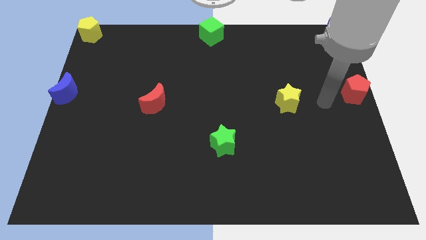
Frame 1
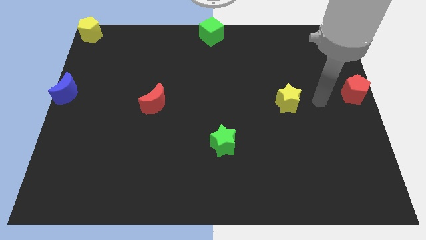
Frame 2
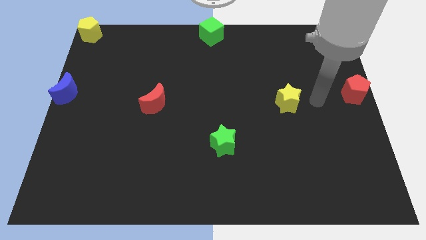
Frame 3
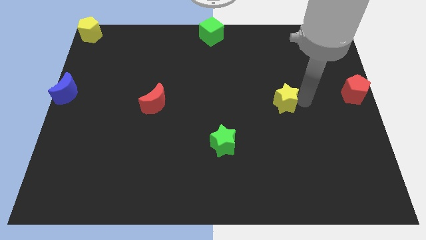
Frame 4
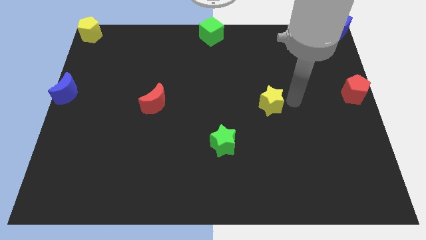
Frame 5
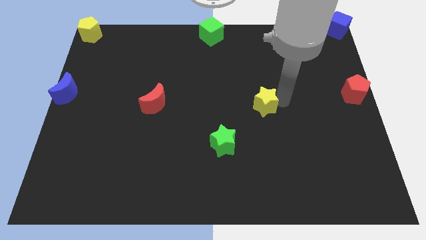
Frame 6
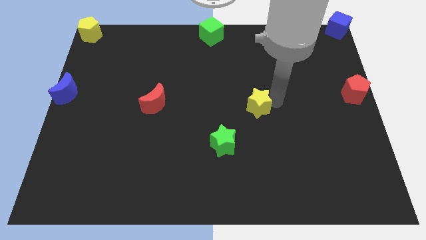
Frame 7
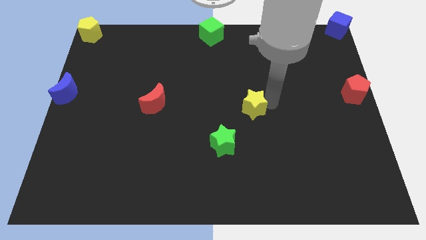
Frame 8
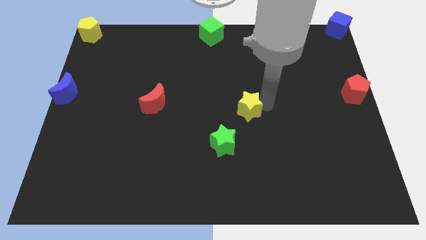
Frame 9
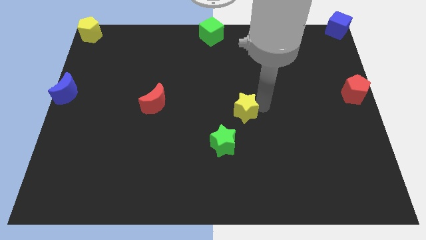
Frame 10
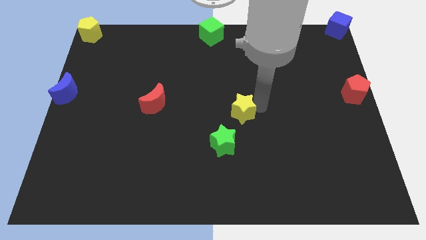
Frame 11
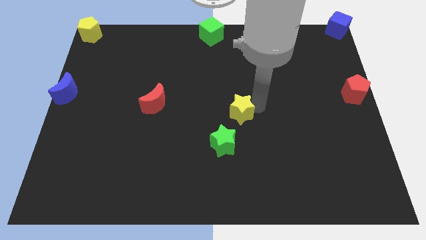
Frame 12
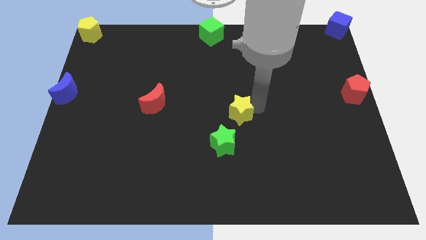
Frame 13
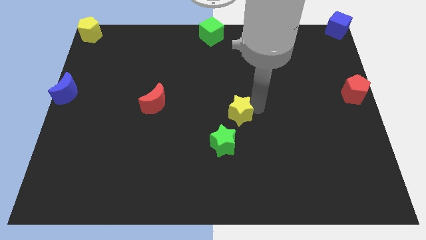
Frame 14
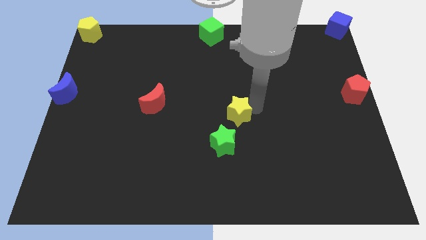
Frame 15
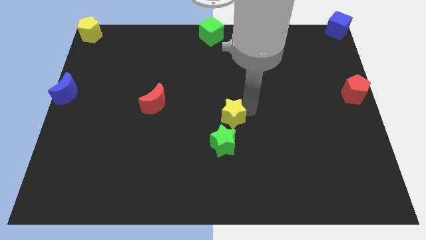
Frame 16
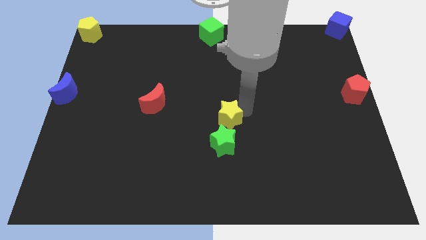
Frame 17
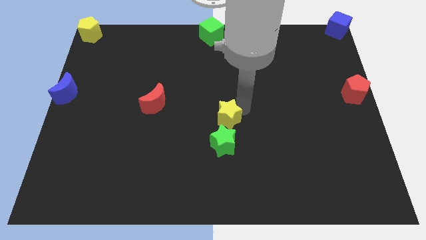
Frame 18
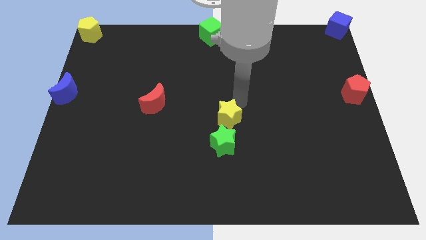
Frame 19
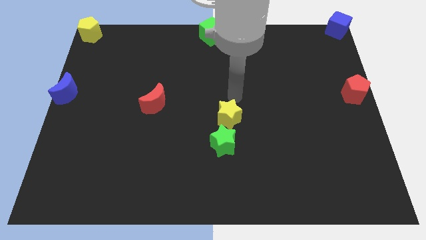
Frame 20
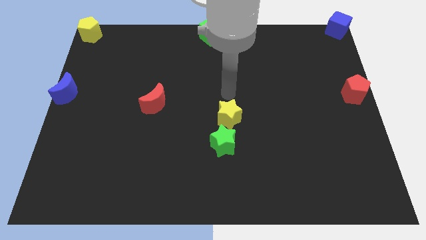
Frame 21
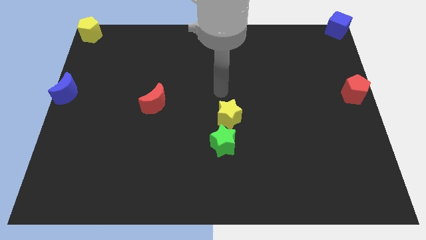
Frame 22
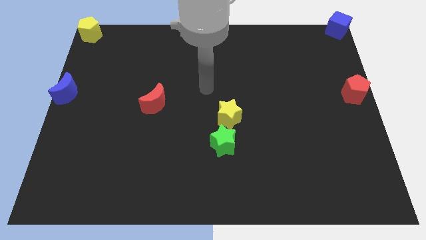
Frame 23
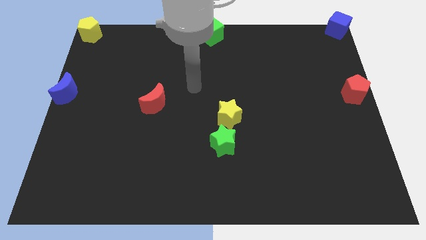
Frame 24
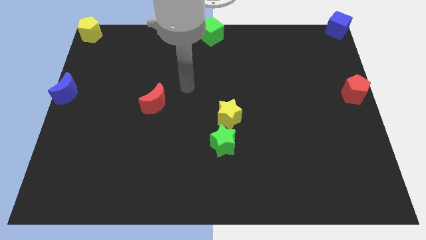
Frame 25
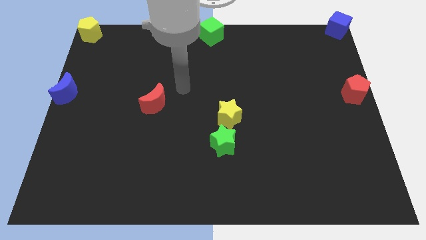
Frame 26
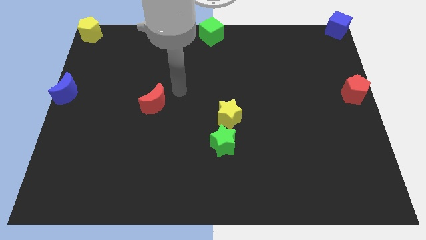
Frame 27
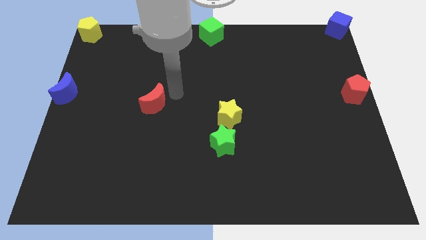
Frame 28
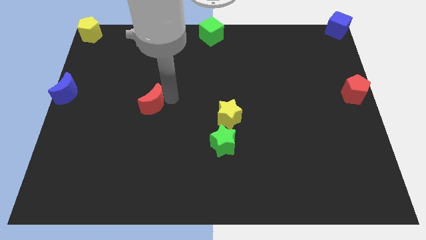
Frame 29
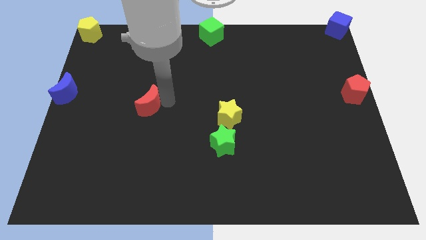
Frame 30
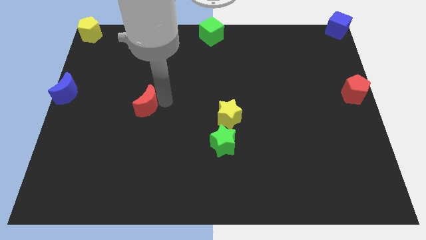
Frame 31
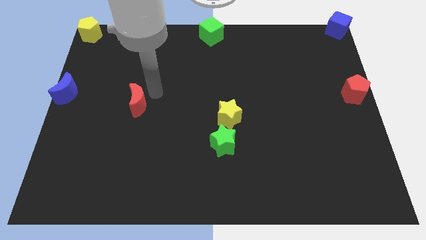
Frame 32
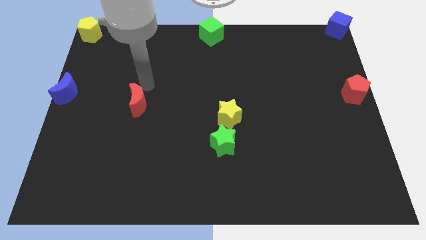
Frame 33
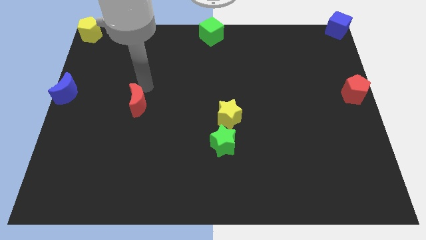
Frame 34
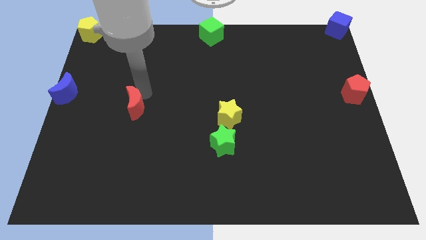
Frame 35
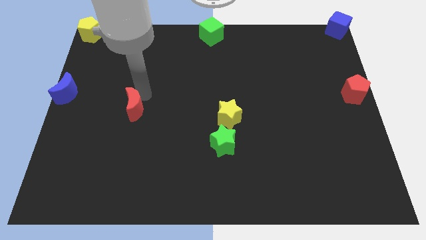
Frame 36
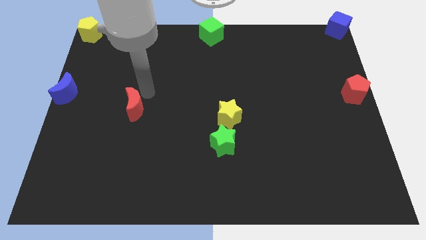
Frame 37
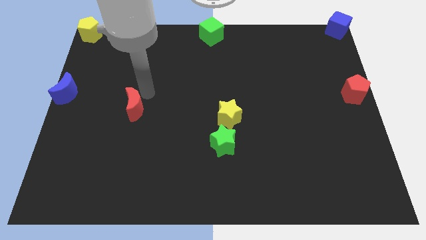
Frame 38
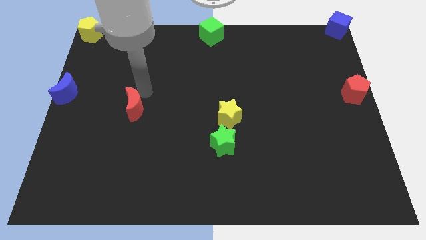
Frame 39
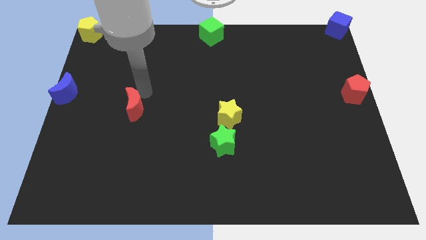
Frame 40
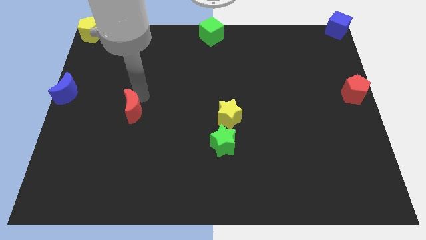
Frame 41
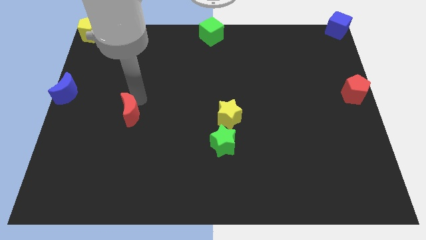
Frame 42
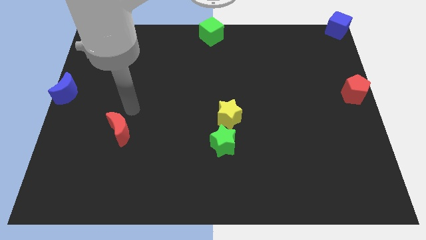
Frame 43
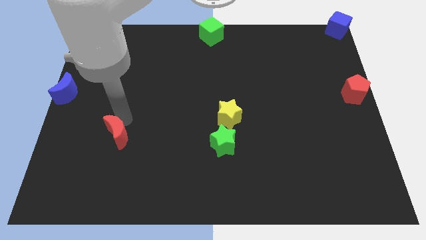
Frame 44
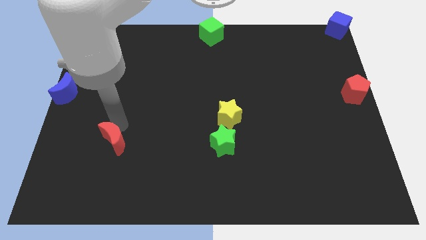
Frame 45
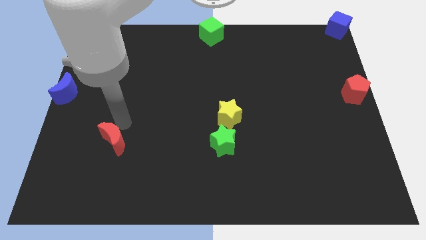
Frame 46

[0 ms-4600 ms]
move the yellow star above the green star

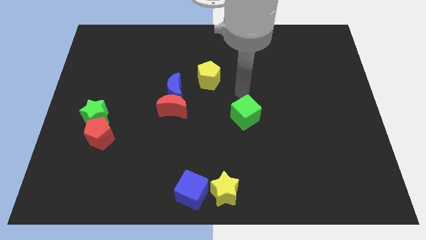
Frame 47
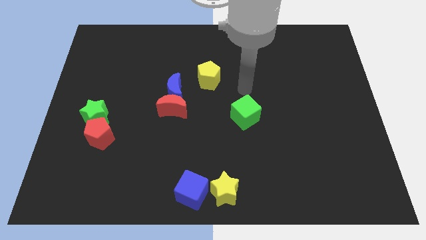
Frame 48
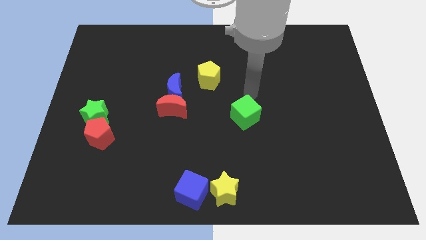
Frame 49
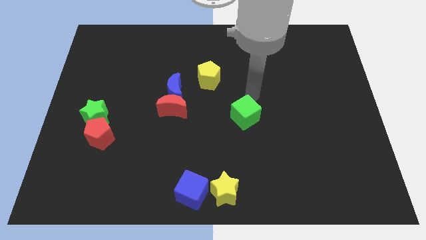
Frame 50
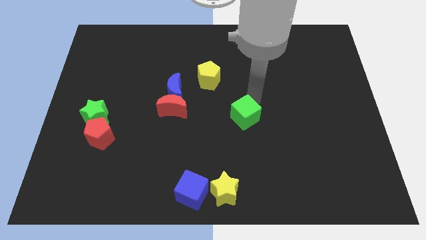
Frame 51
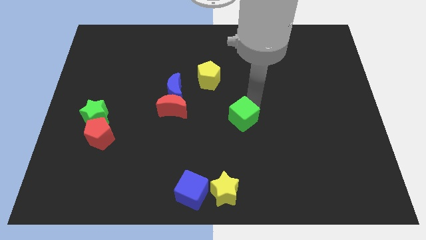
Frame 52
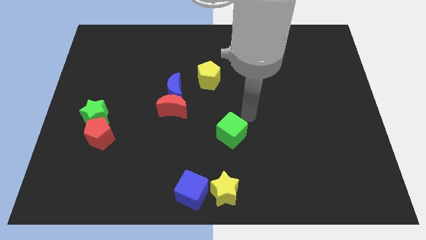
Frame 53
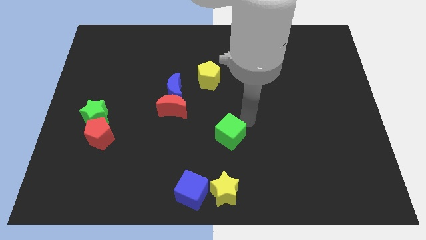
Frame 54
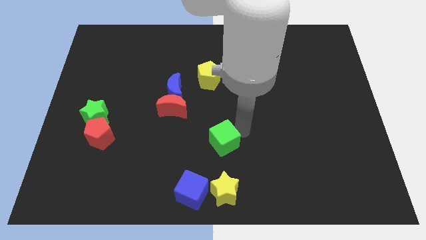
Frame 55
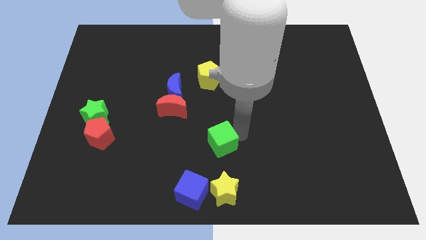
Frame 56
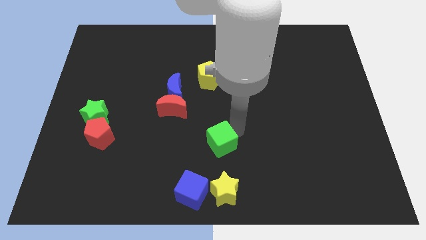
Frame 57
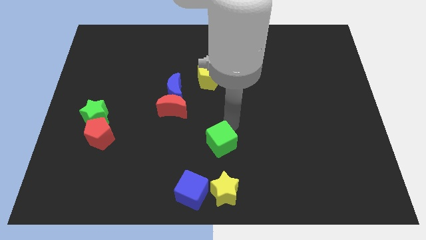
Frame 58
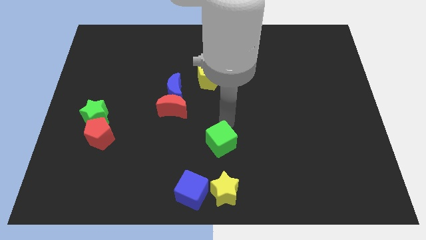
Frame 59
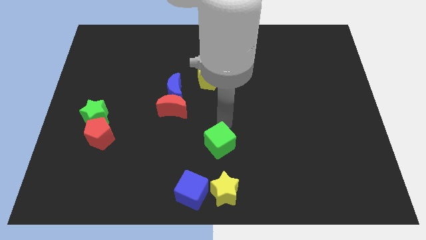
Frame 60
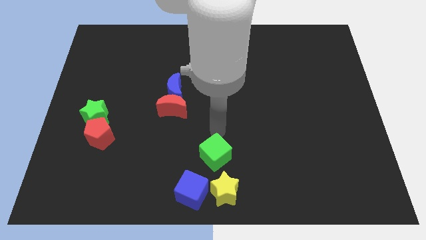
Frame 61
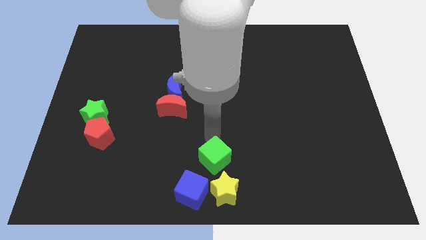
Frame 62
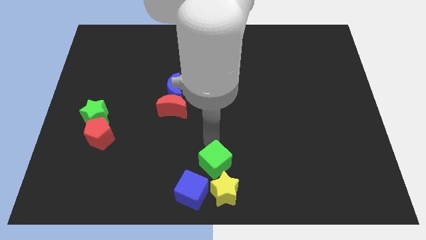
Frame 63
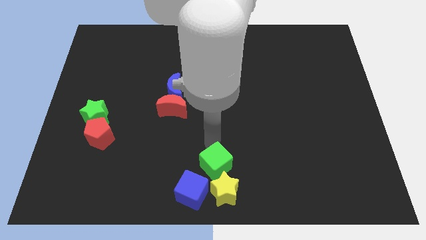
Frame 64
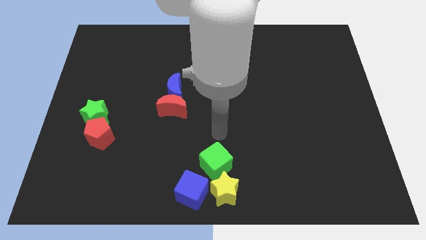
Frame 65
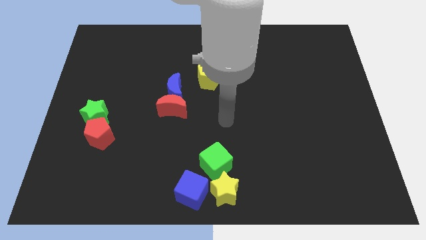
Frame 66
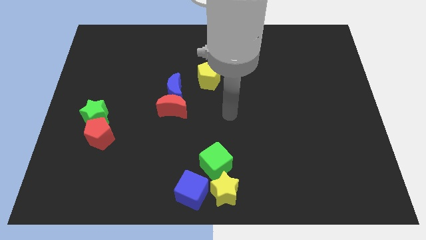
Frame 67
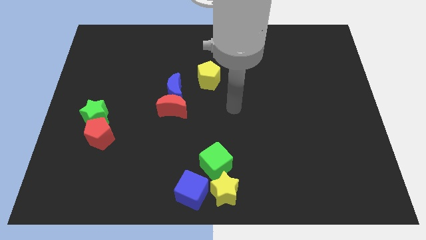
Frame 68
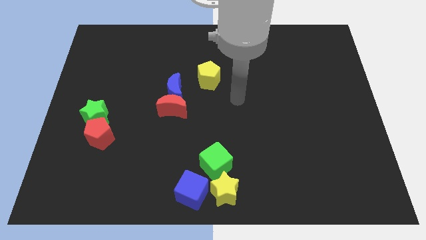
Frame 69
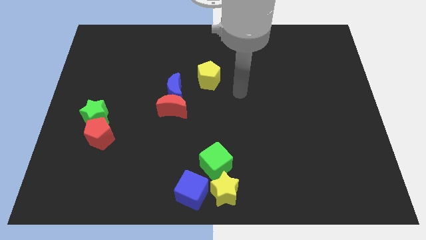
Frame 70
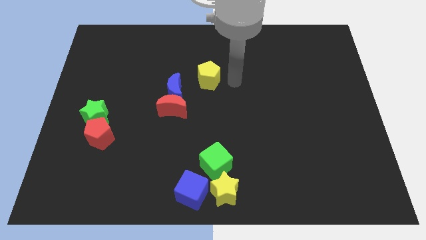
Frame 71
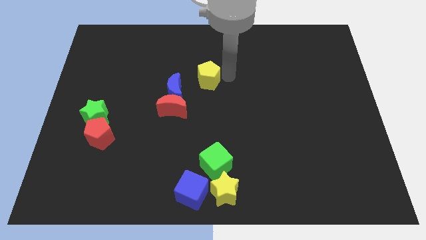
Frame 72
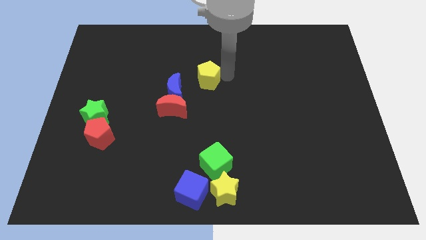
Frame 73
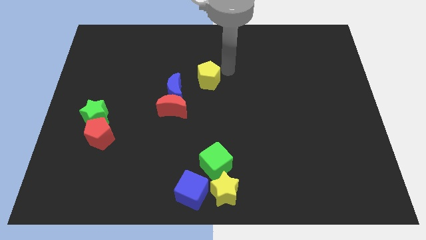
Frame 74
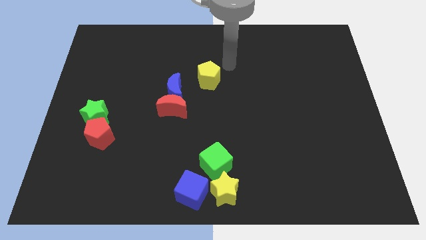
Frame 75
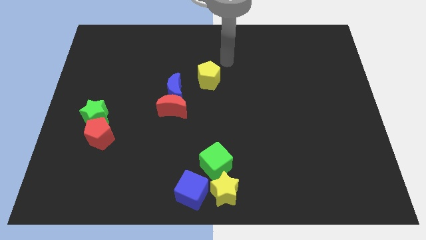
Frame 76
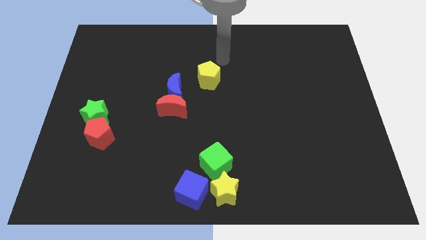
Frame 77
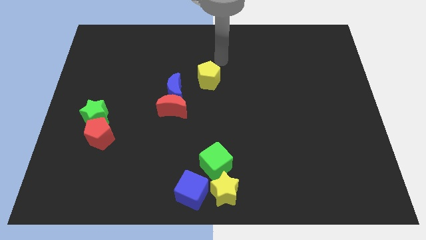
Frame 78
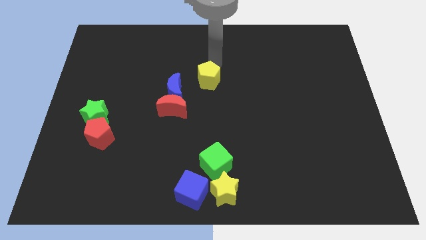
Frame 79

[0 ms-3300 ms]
push the green cube to the top side of the blue cube and yellow star

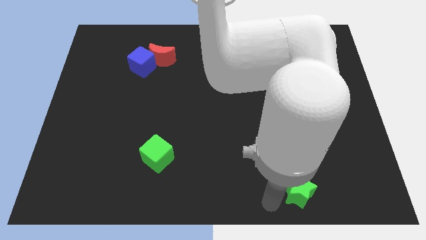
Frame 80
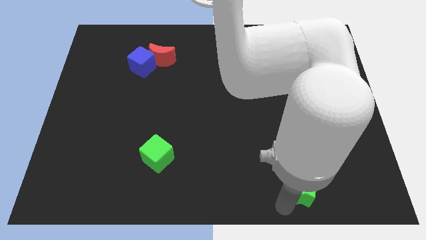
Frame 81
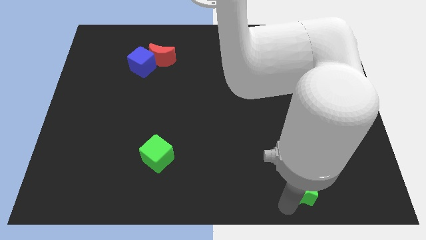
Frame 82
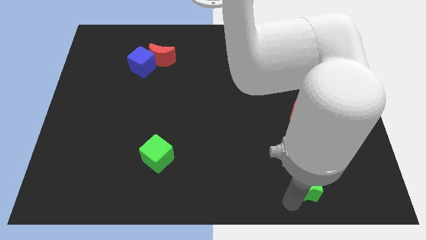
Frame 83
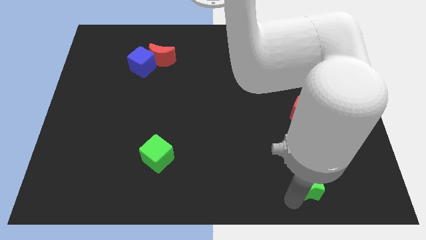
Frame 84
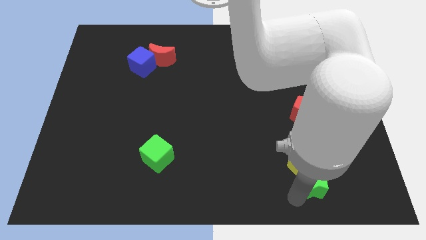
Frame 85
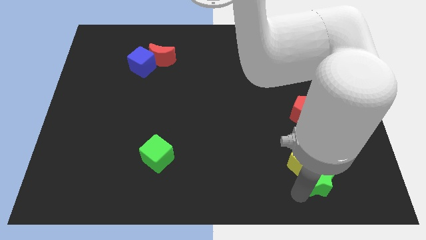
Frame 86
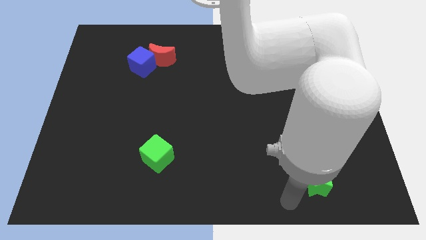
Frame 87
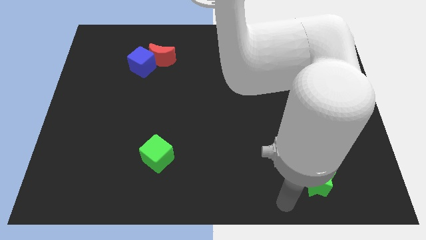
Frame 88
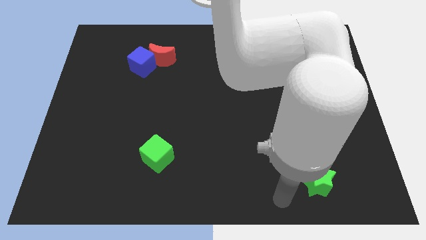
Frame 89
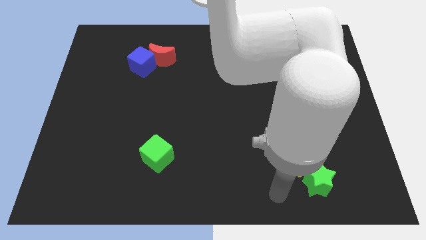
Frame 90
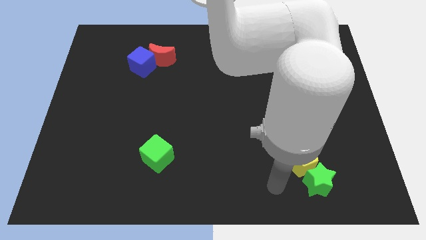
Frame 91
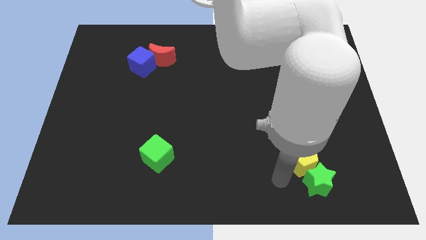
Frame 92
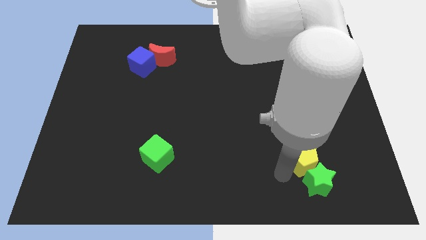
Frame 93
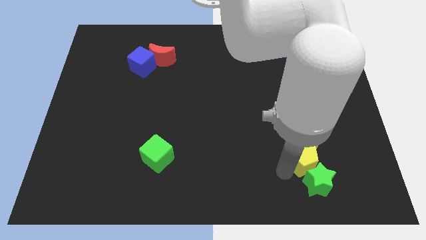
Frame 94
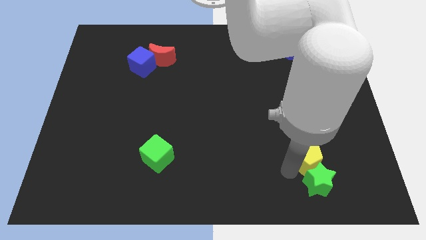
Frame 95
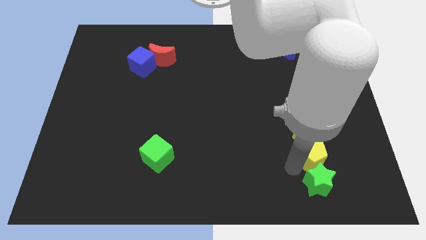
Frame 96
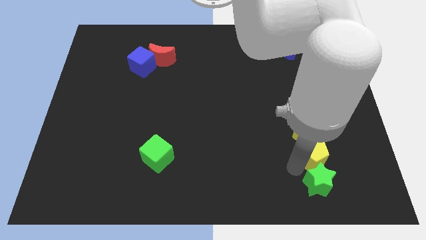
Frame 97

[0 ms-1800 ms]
place green star in line with yellow pentagon
